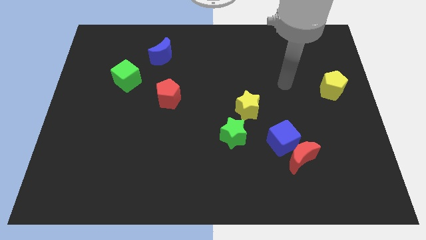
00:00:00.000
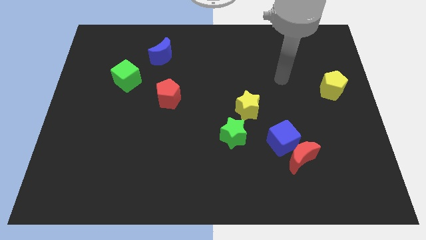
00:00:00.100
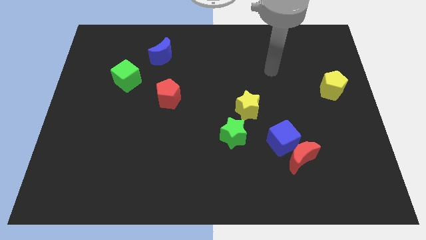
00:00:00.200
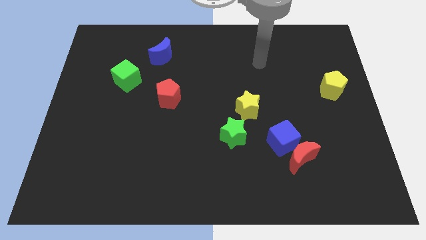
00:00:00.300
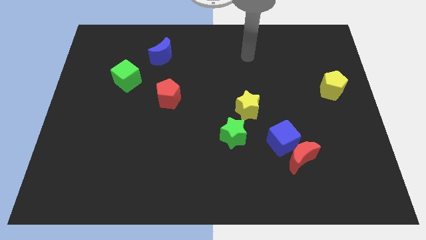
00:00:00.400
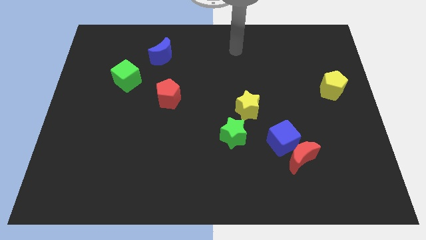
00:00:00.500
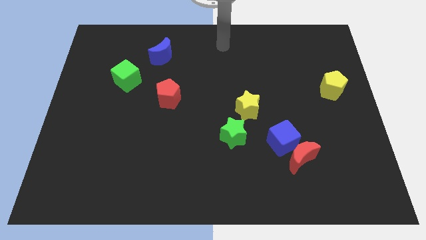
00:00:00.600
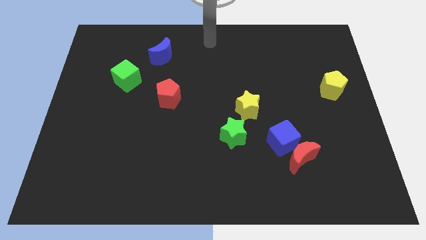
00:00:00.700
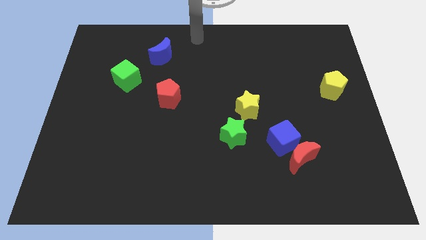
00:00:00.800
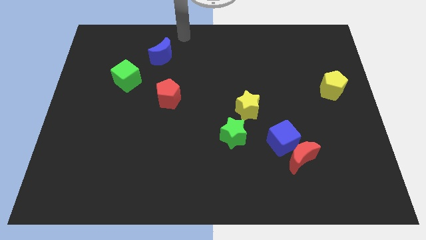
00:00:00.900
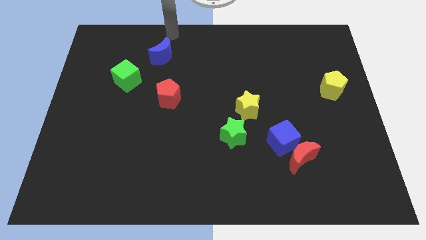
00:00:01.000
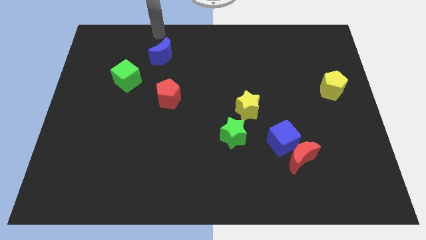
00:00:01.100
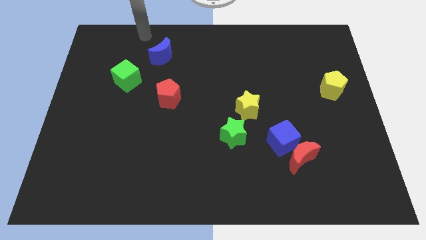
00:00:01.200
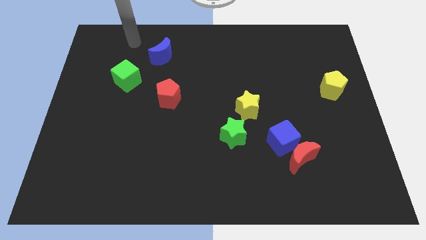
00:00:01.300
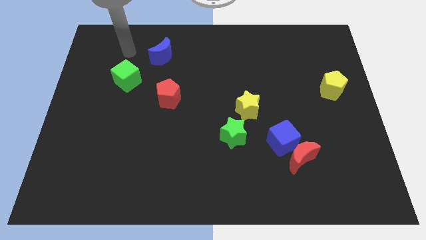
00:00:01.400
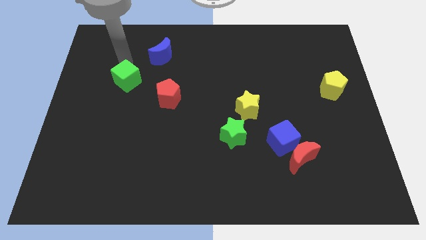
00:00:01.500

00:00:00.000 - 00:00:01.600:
place the arm near to green cube

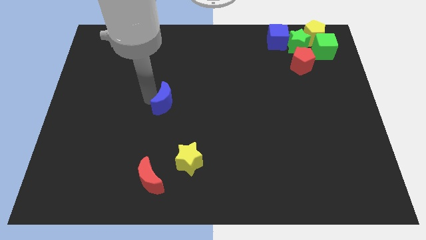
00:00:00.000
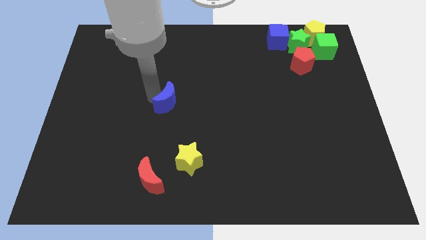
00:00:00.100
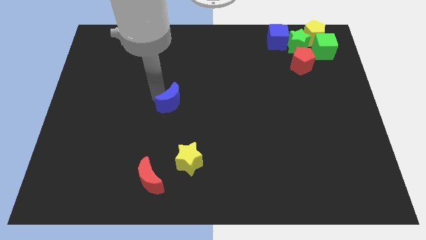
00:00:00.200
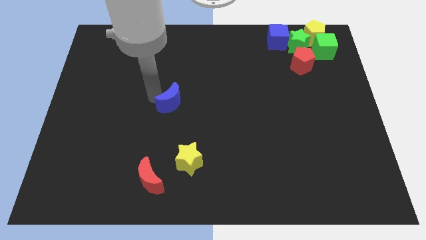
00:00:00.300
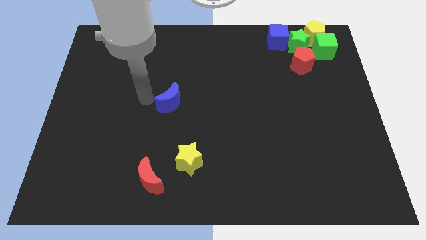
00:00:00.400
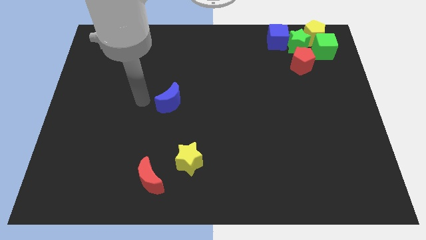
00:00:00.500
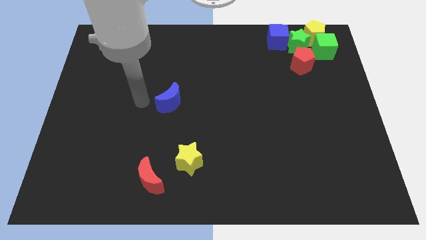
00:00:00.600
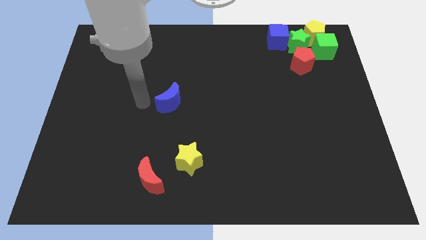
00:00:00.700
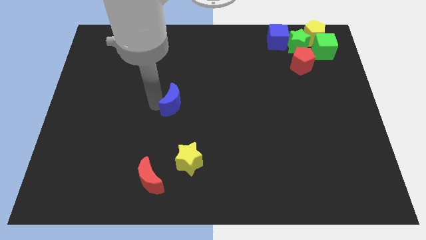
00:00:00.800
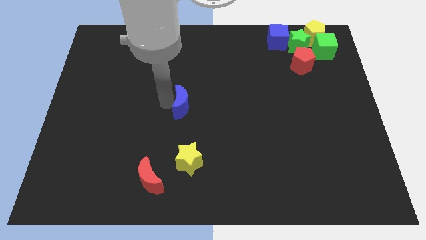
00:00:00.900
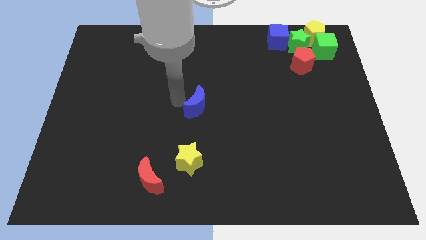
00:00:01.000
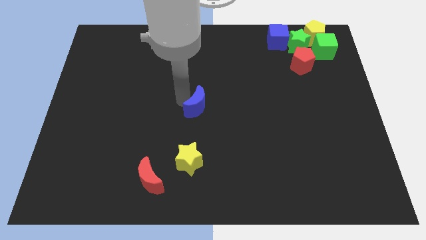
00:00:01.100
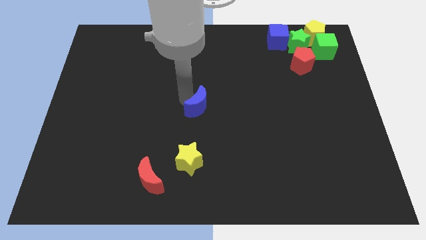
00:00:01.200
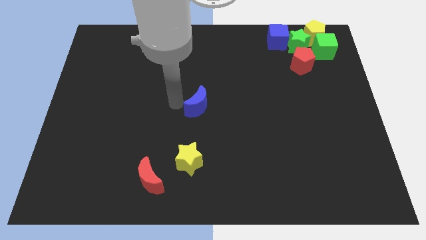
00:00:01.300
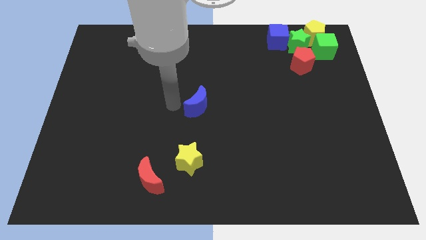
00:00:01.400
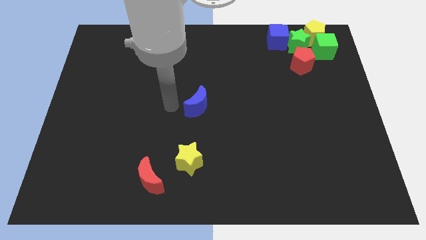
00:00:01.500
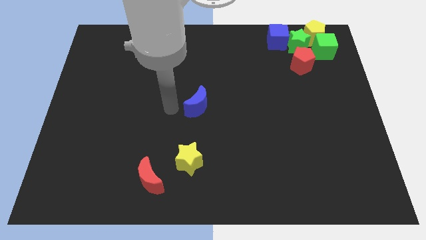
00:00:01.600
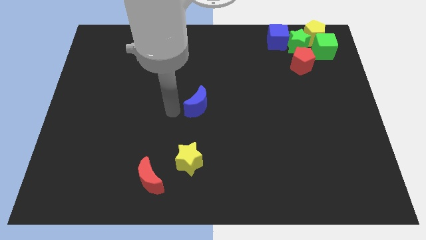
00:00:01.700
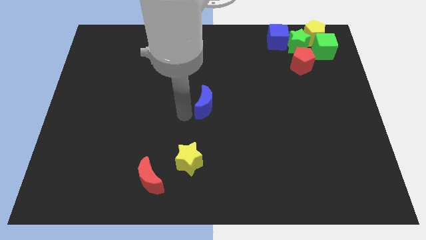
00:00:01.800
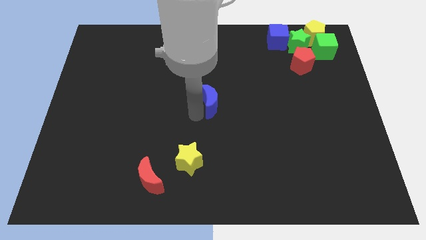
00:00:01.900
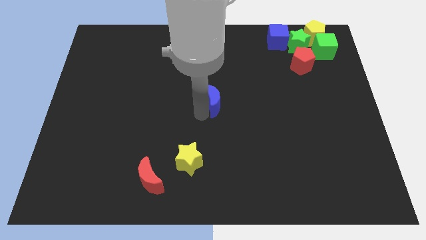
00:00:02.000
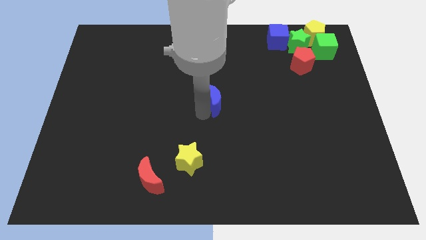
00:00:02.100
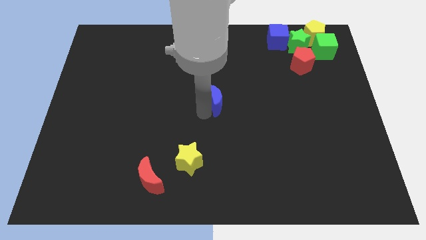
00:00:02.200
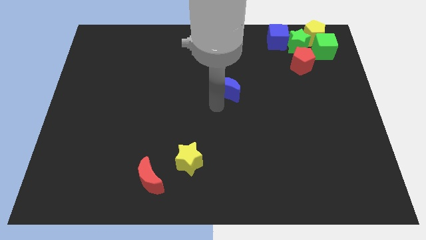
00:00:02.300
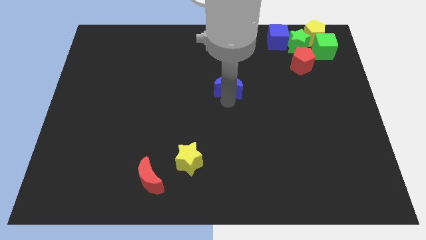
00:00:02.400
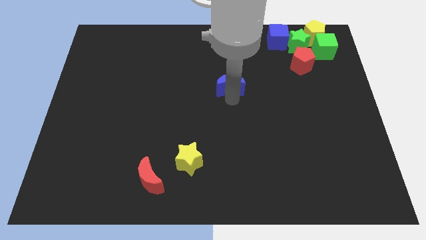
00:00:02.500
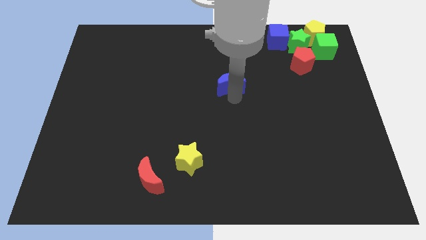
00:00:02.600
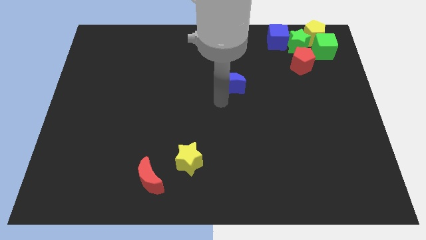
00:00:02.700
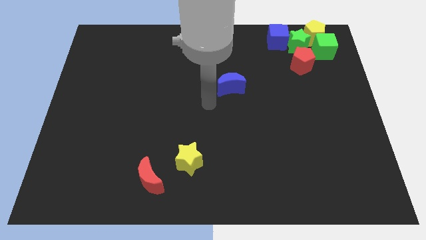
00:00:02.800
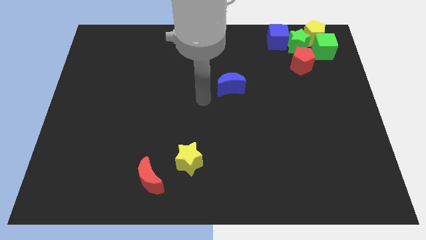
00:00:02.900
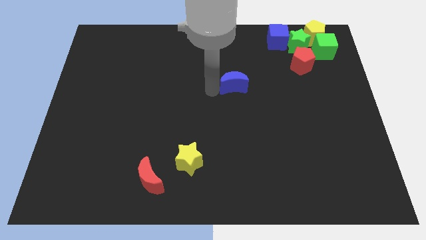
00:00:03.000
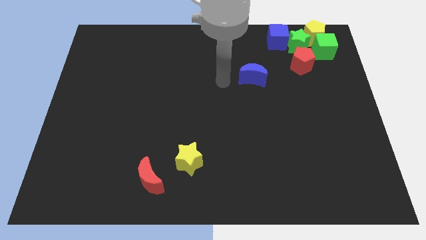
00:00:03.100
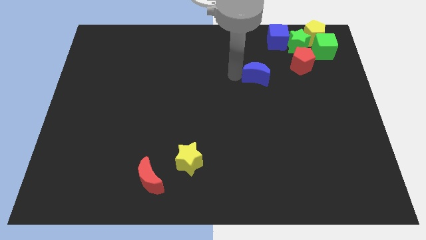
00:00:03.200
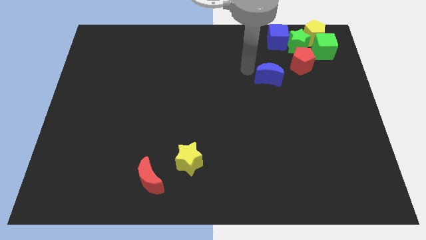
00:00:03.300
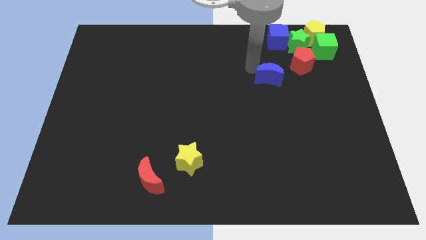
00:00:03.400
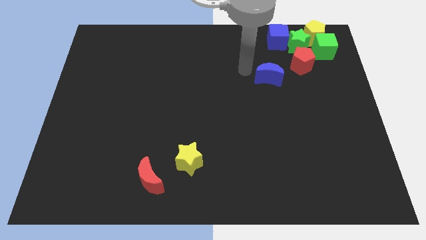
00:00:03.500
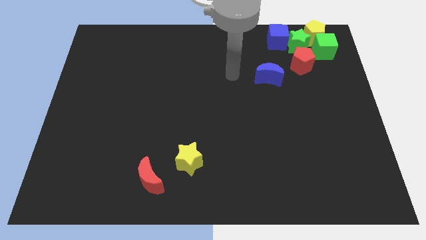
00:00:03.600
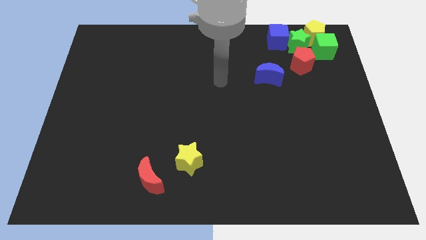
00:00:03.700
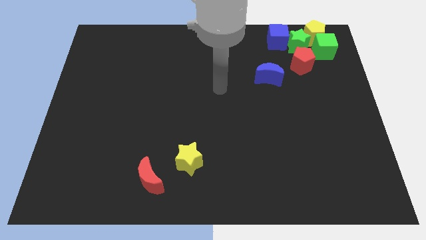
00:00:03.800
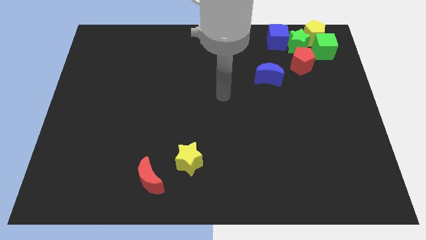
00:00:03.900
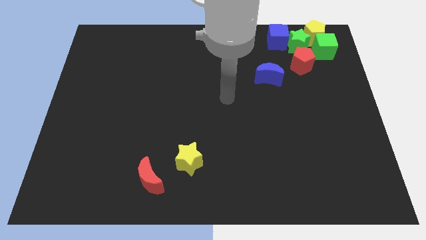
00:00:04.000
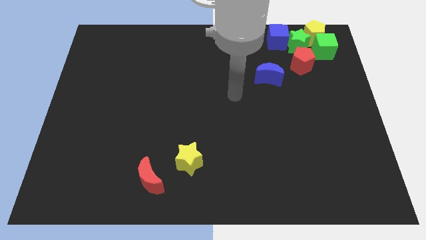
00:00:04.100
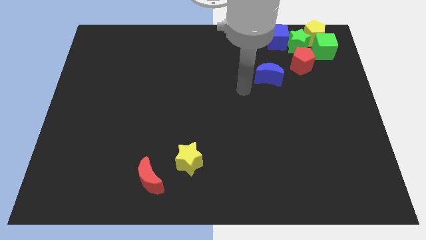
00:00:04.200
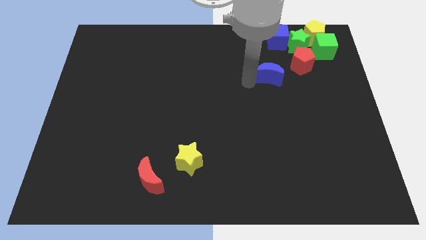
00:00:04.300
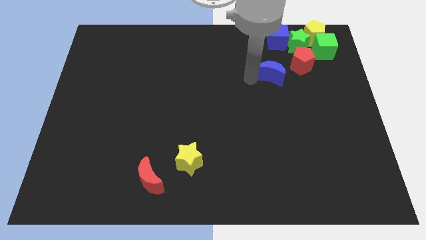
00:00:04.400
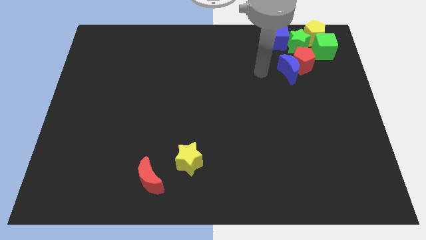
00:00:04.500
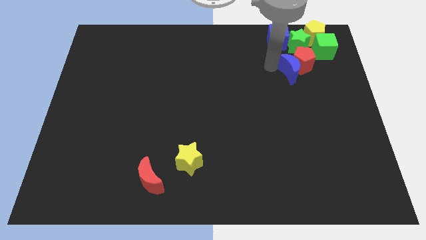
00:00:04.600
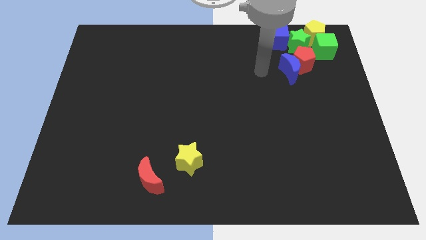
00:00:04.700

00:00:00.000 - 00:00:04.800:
push the blue moon into the red pentagon

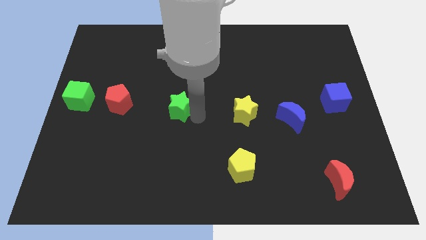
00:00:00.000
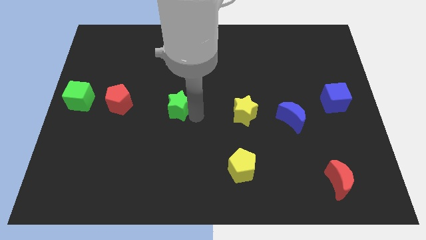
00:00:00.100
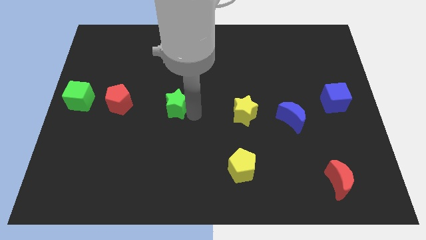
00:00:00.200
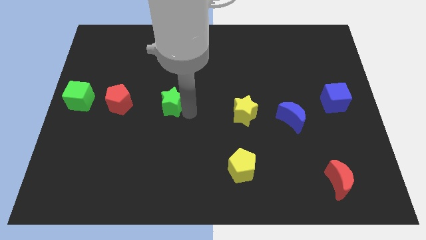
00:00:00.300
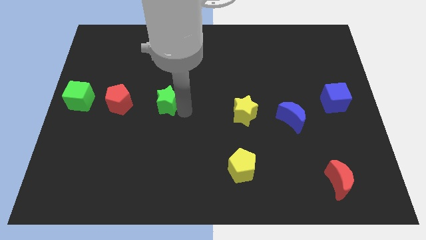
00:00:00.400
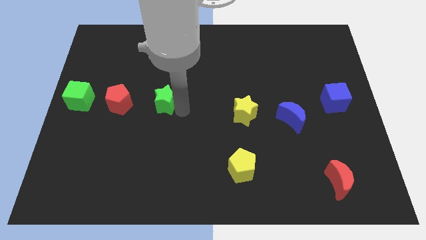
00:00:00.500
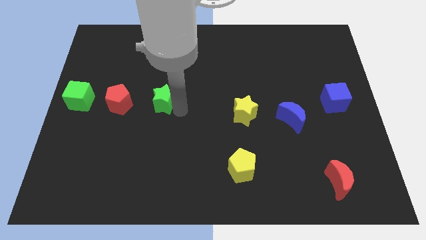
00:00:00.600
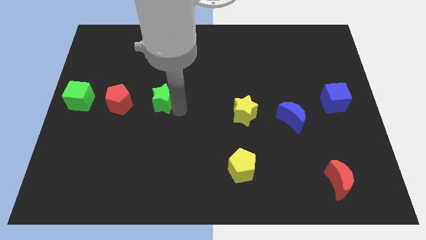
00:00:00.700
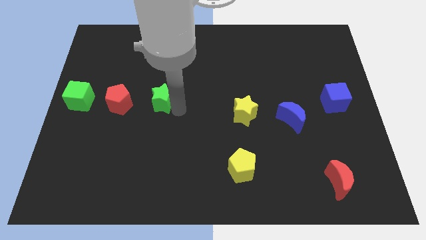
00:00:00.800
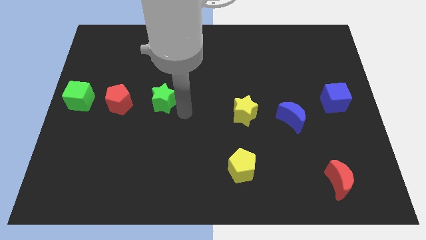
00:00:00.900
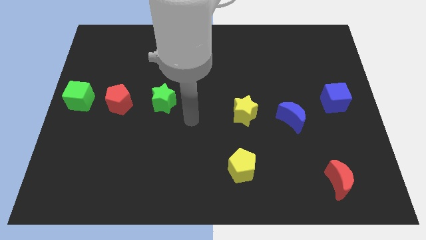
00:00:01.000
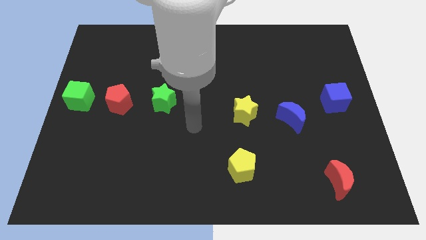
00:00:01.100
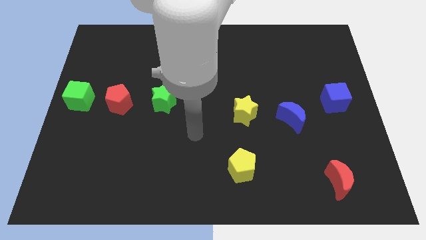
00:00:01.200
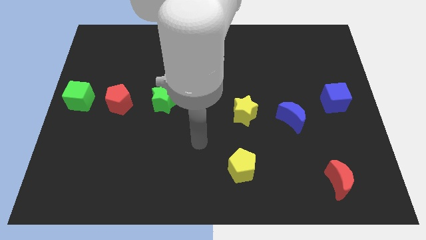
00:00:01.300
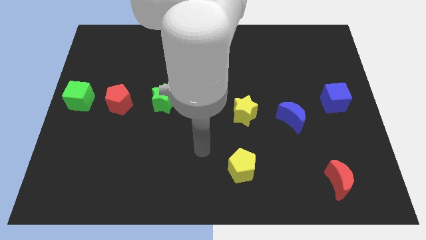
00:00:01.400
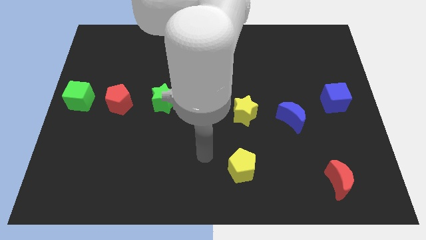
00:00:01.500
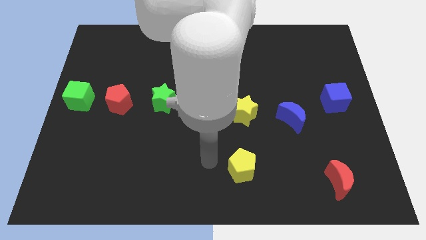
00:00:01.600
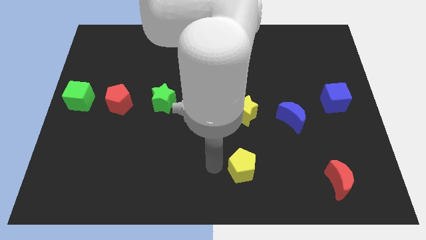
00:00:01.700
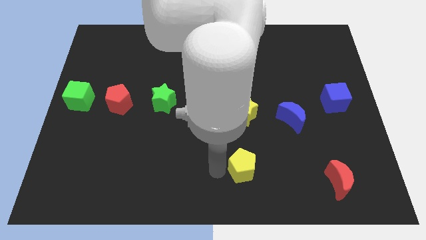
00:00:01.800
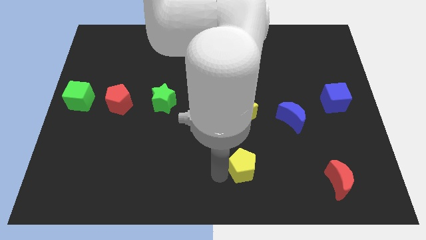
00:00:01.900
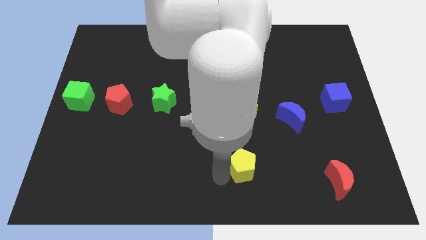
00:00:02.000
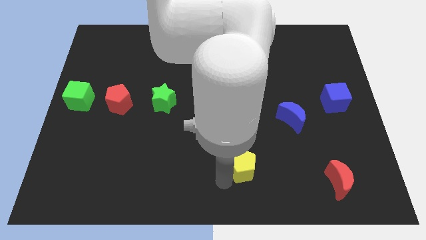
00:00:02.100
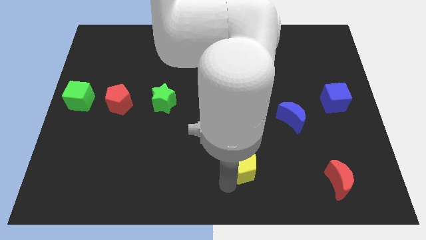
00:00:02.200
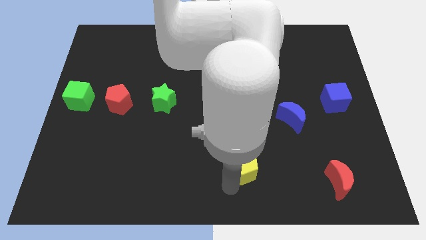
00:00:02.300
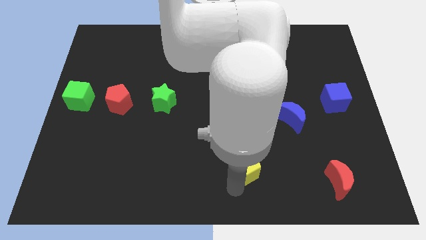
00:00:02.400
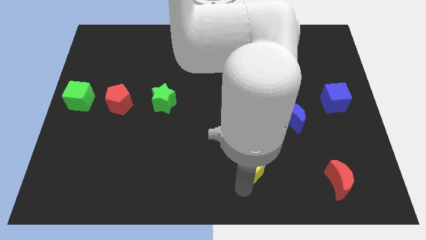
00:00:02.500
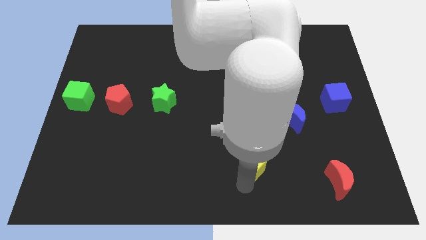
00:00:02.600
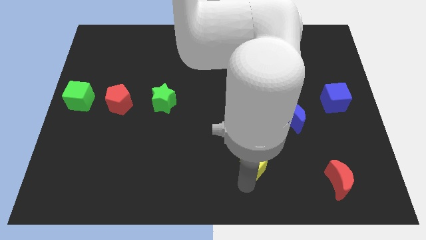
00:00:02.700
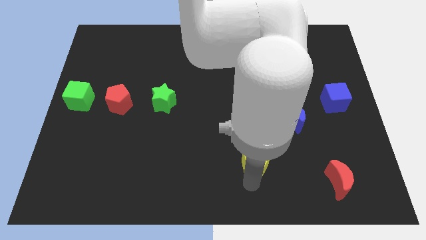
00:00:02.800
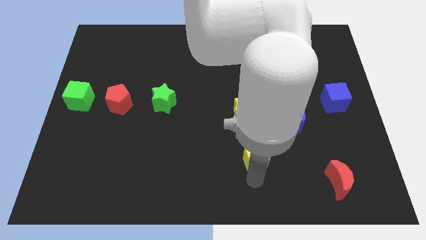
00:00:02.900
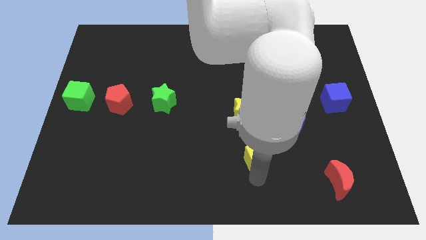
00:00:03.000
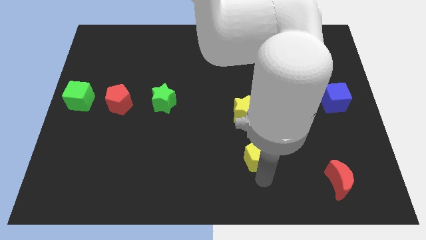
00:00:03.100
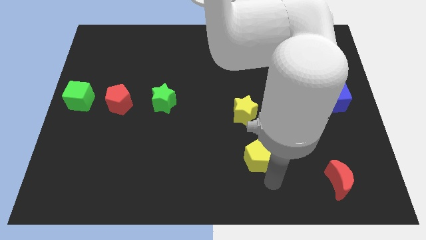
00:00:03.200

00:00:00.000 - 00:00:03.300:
point your arm below yellow pentagon
